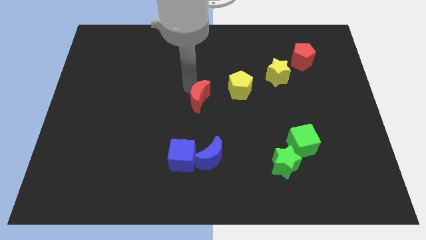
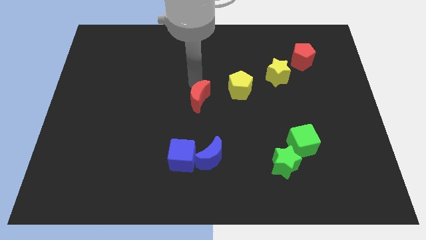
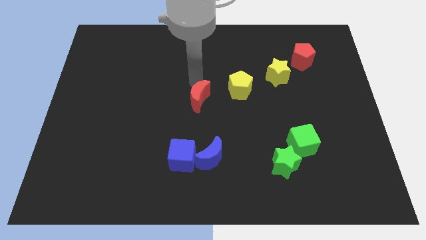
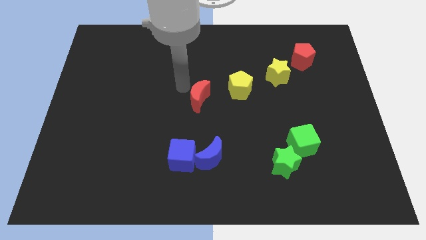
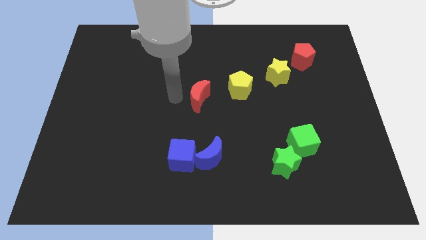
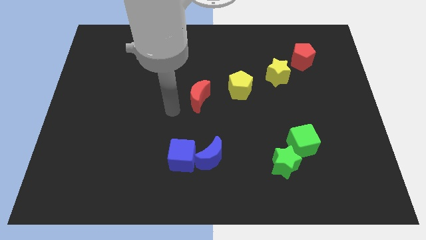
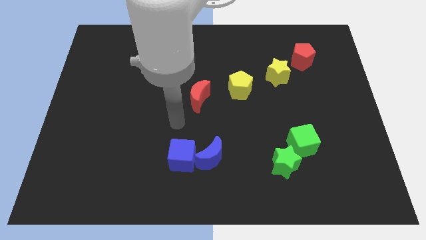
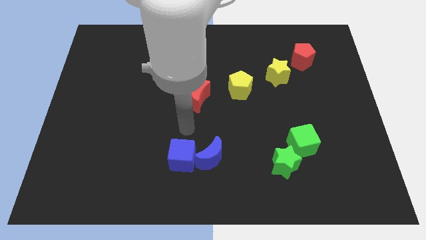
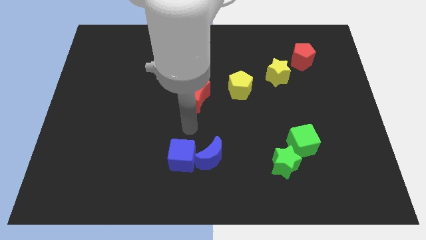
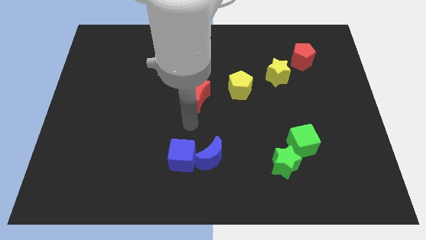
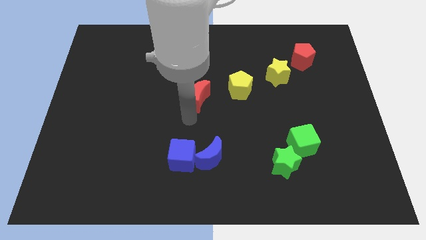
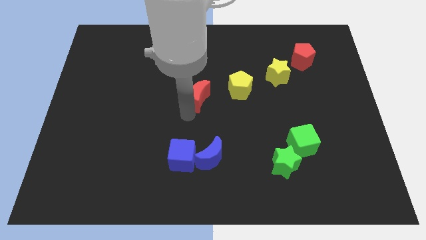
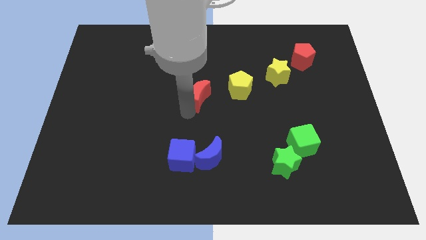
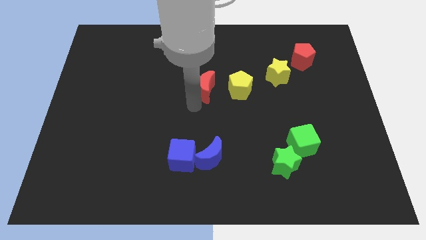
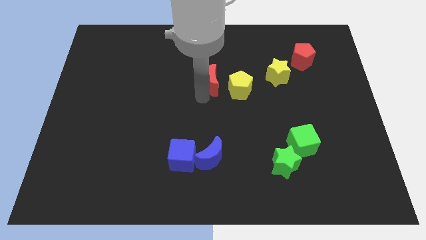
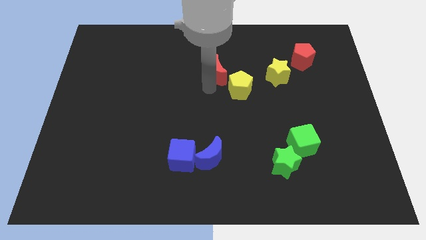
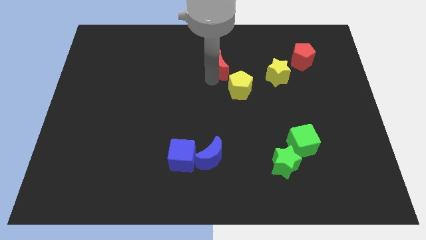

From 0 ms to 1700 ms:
move the red moon left above the yellow pentagon

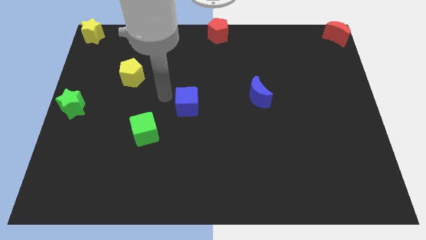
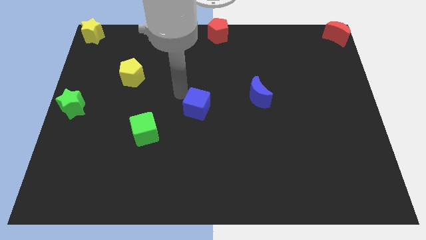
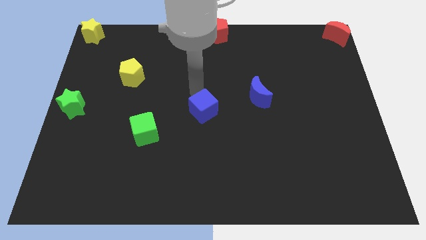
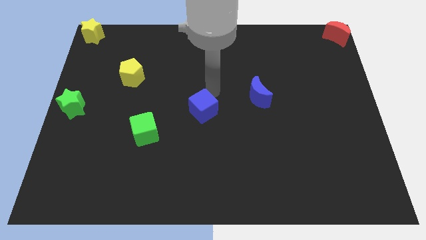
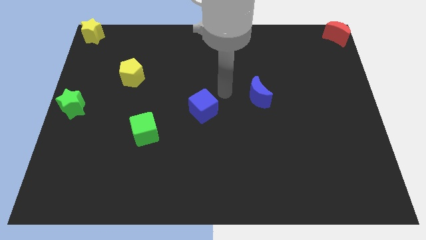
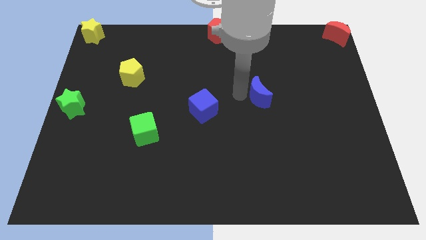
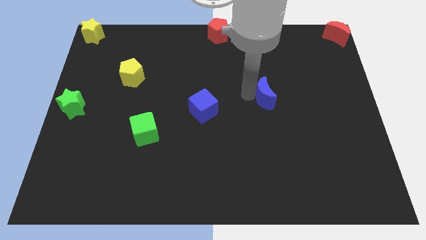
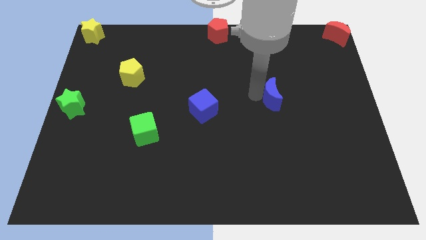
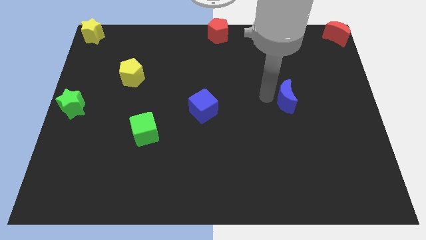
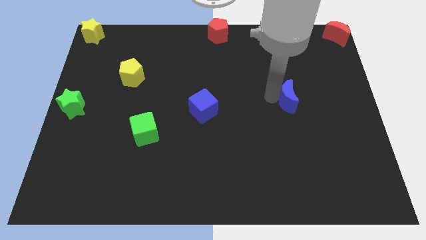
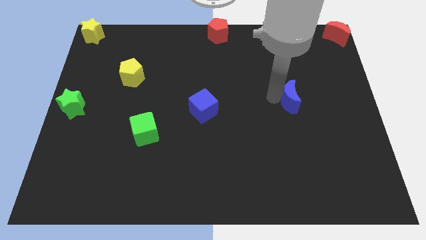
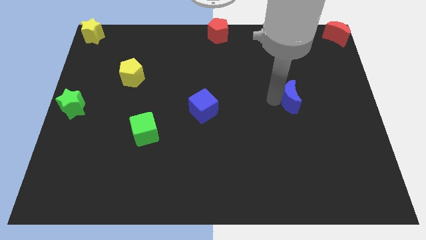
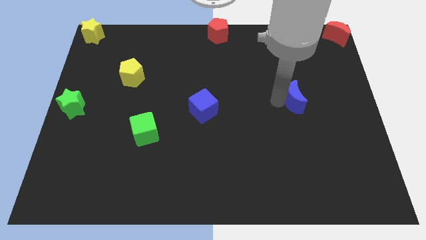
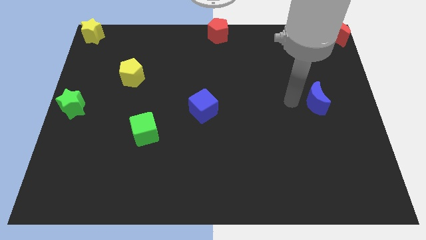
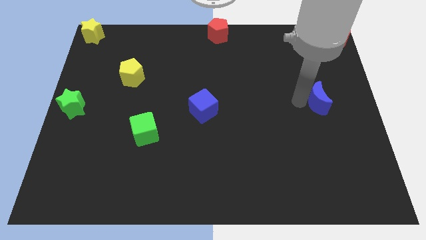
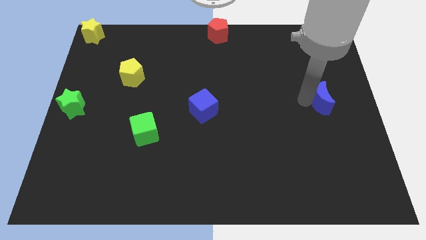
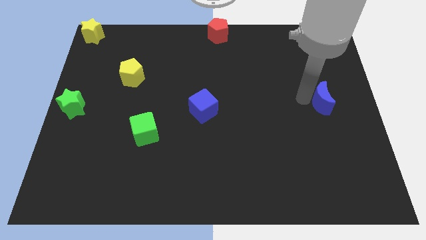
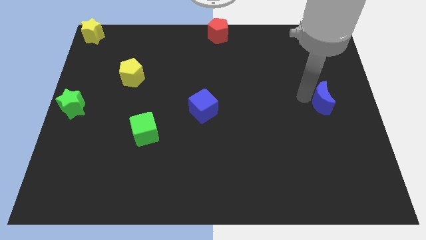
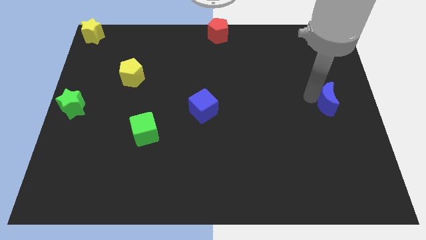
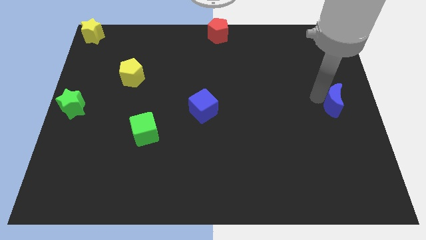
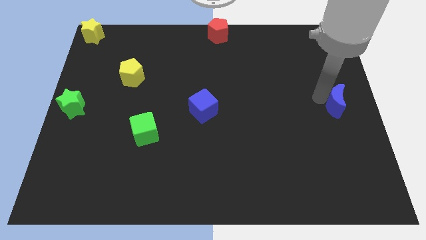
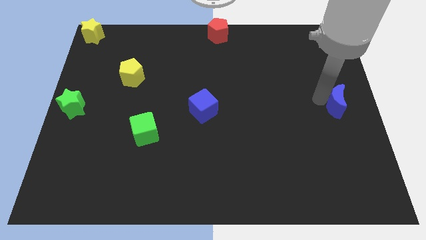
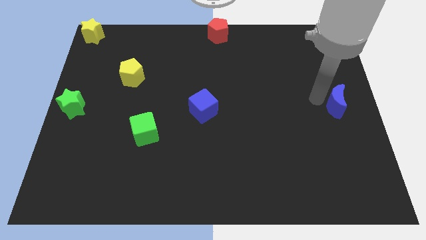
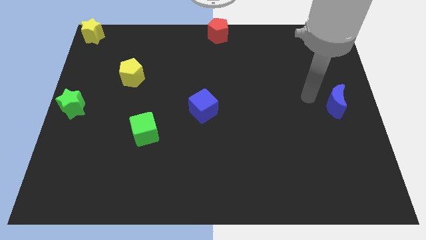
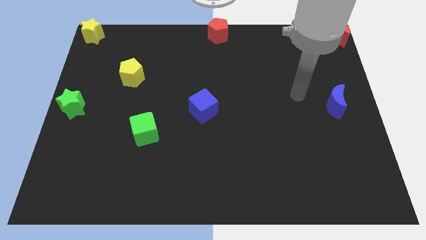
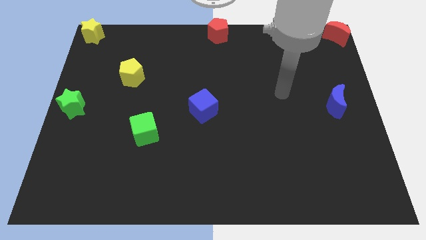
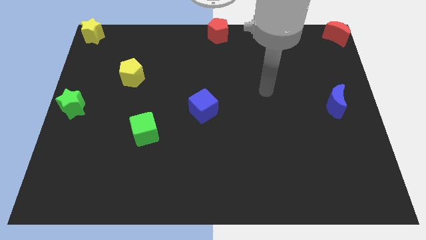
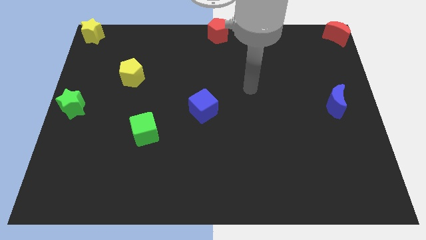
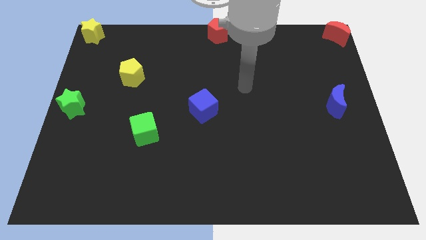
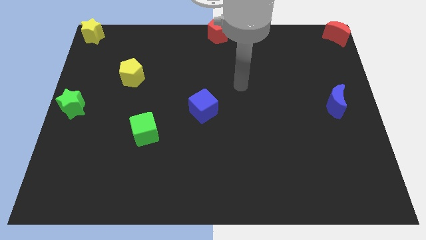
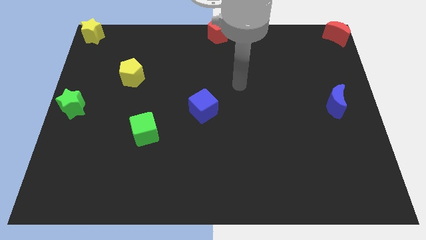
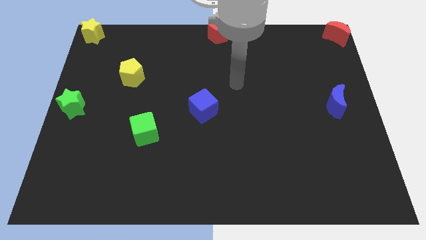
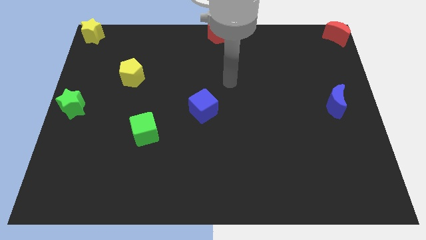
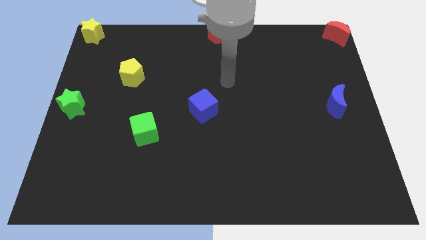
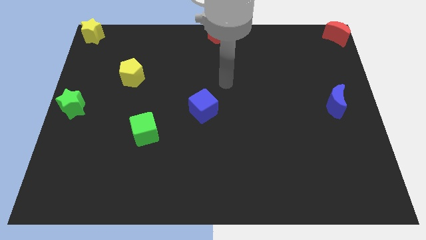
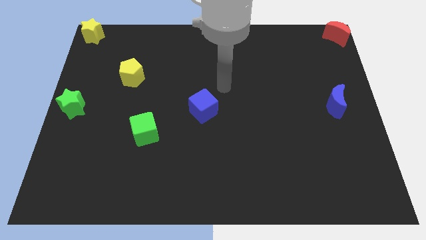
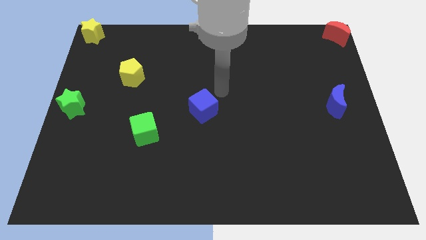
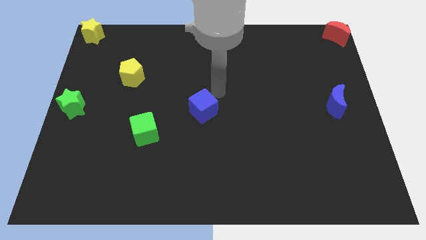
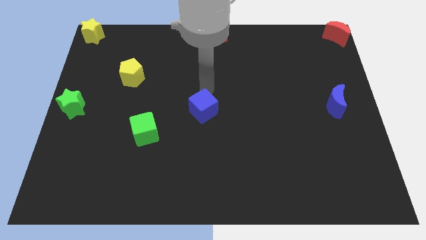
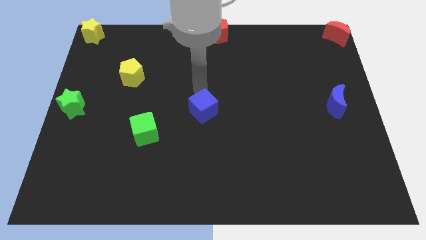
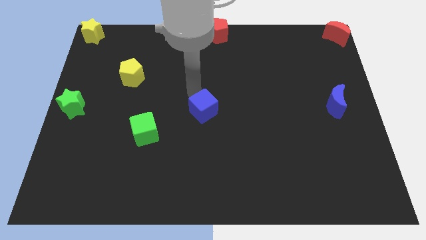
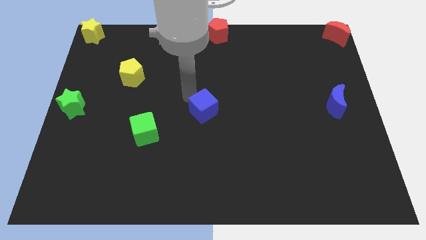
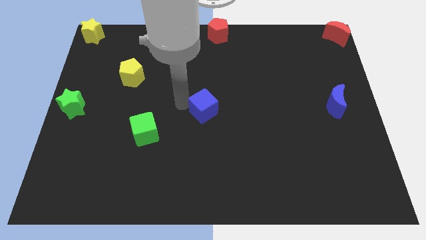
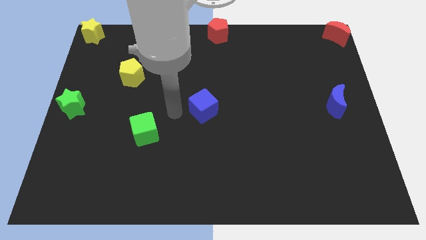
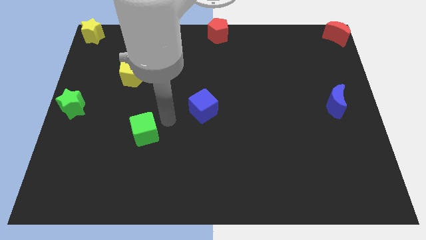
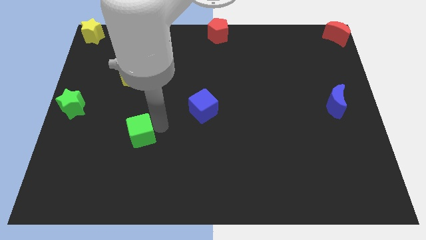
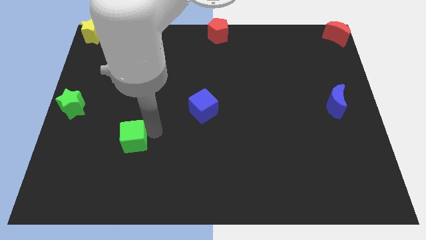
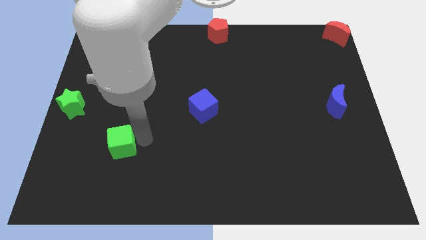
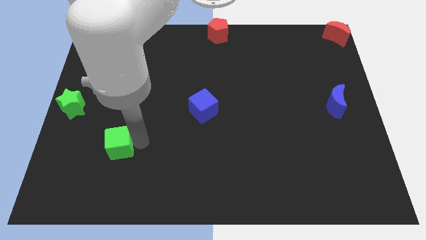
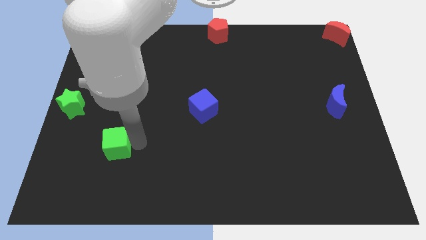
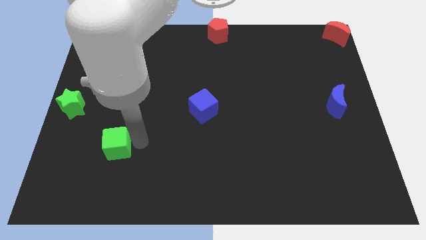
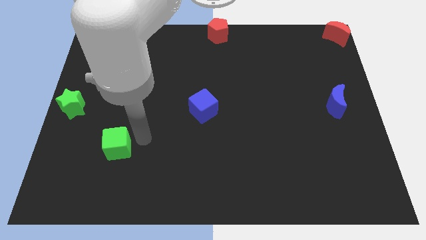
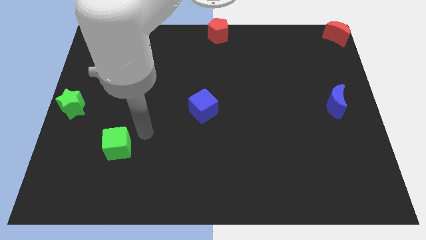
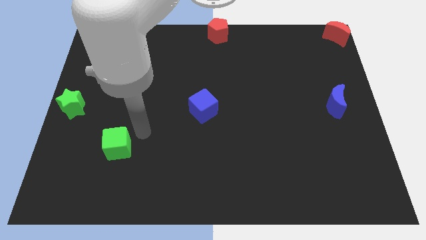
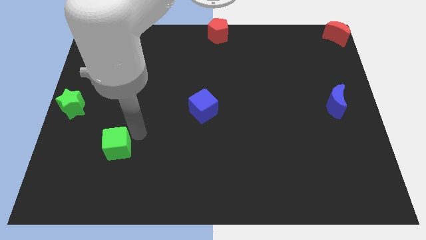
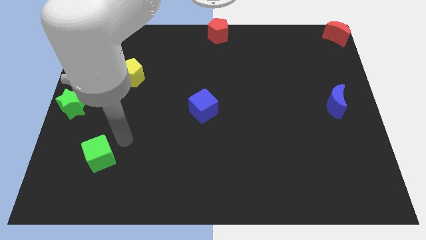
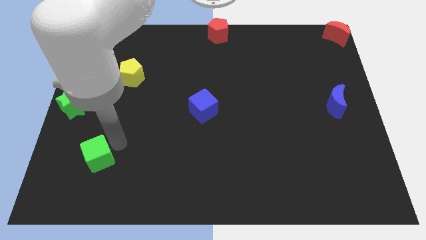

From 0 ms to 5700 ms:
push the blue crescent towards the right center of the board

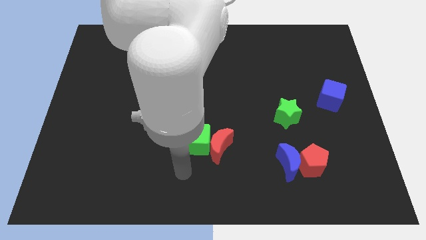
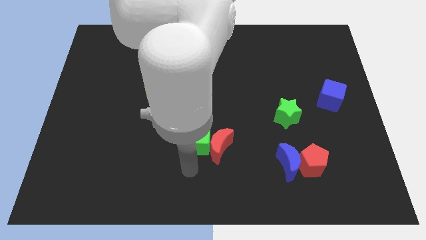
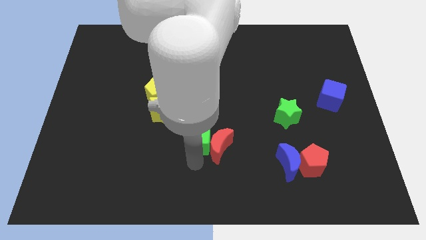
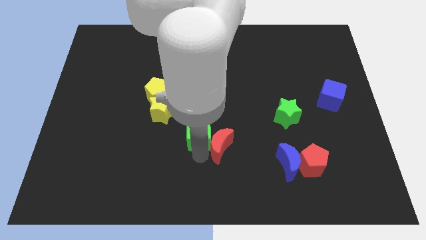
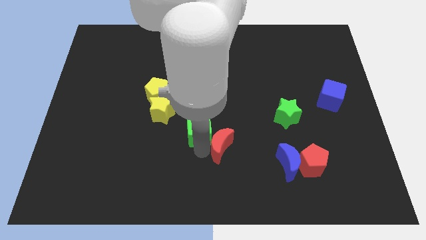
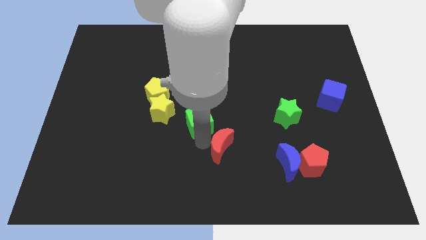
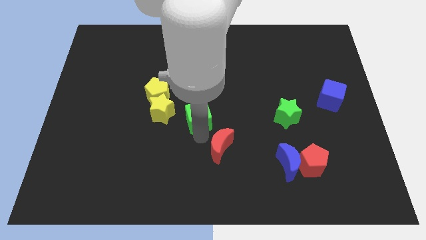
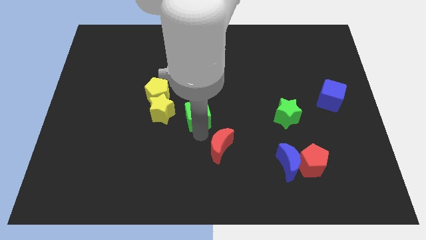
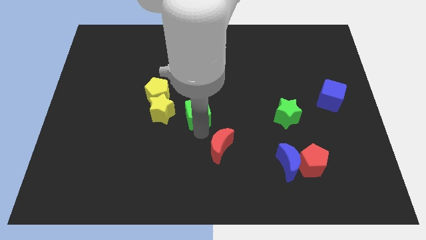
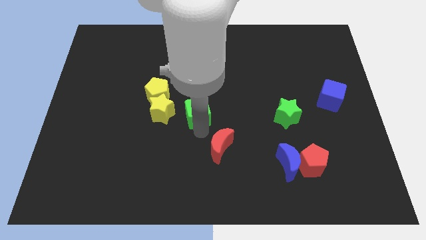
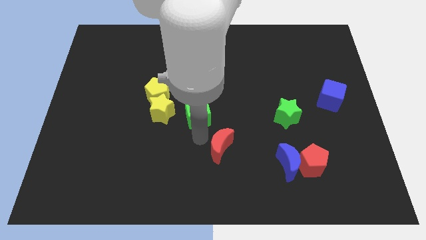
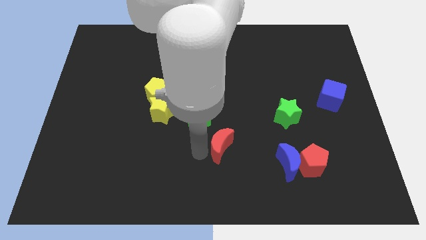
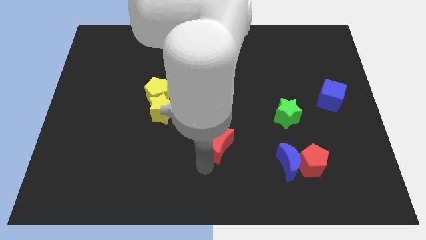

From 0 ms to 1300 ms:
place the green cube parallel to green star

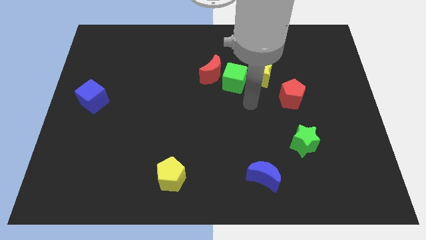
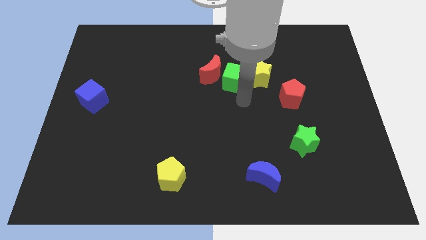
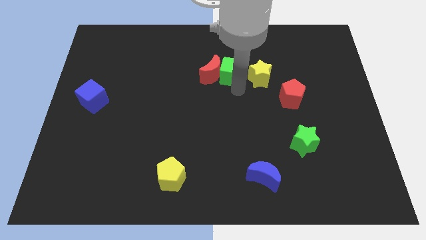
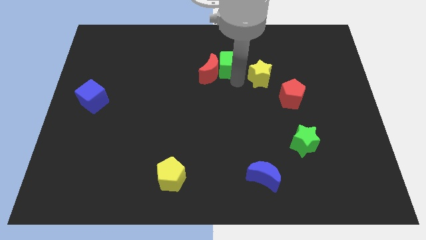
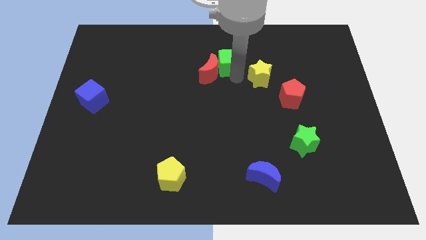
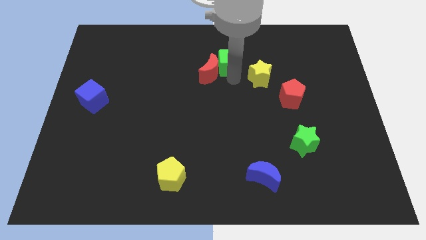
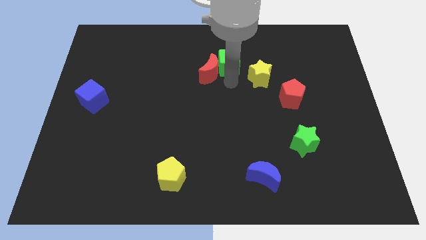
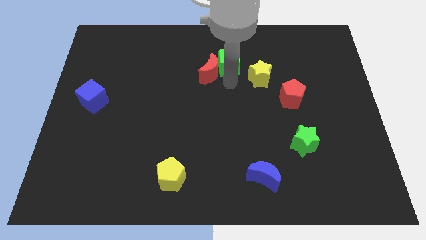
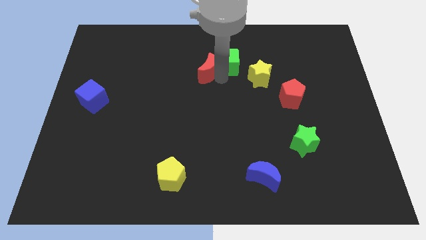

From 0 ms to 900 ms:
push the green cube slightly to the top
